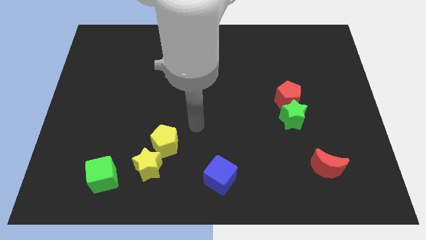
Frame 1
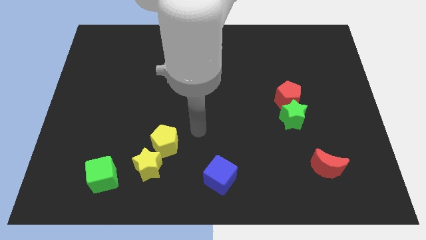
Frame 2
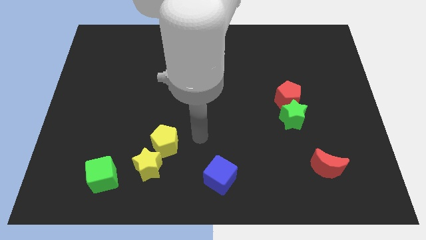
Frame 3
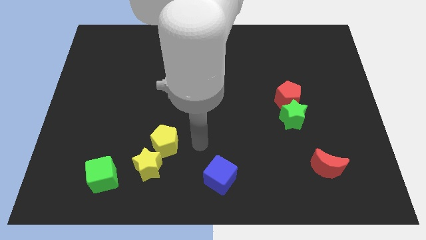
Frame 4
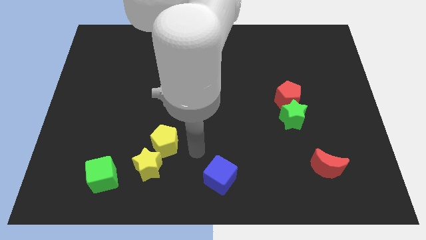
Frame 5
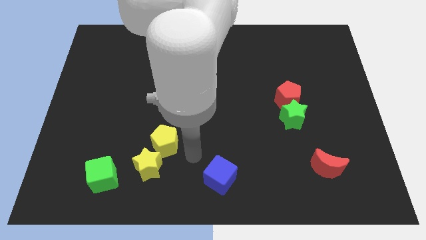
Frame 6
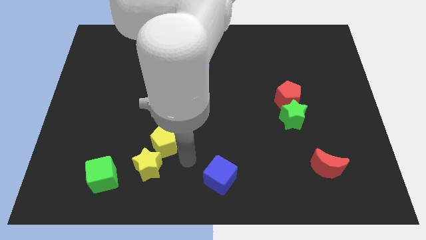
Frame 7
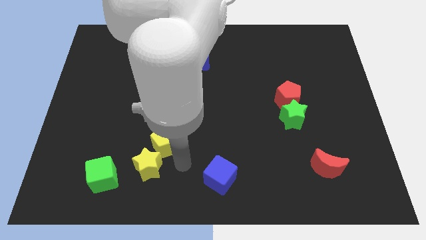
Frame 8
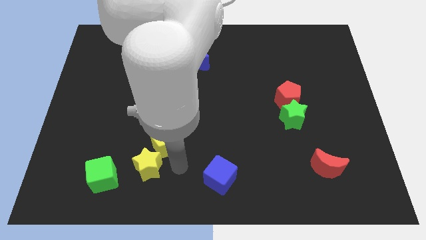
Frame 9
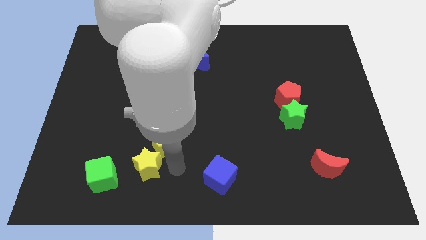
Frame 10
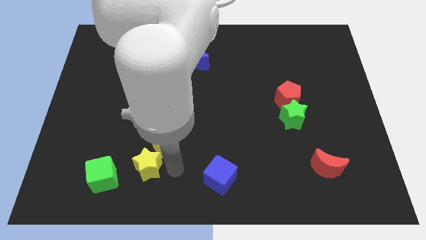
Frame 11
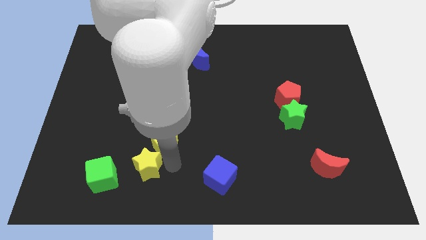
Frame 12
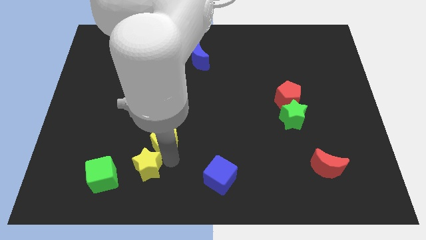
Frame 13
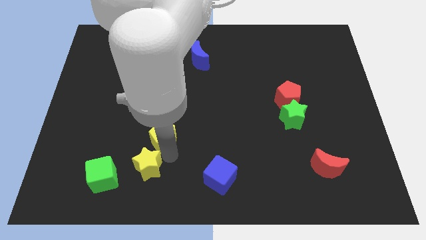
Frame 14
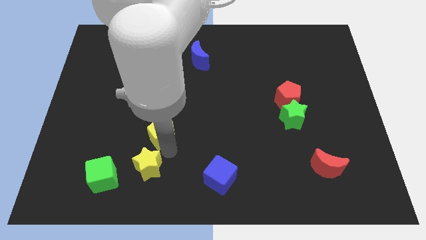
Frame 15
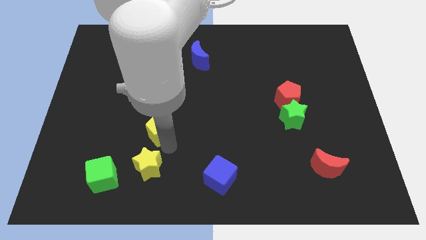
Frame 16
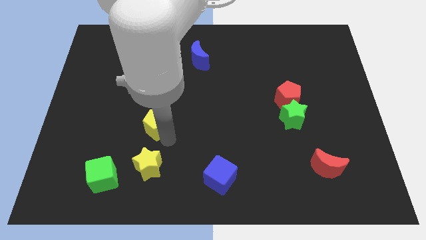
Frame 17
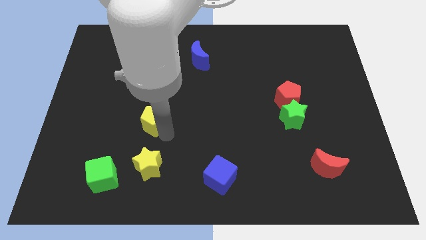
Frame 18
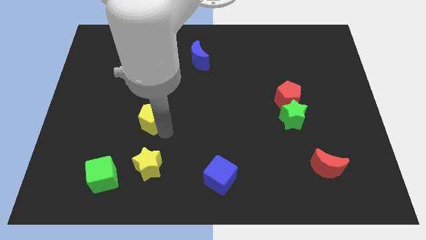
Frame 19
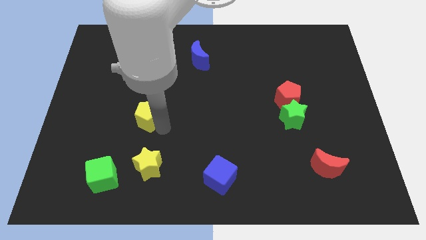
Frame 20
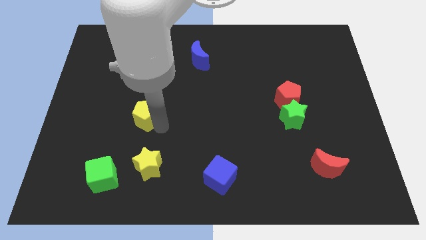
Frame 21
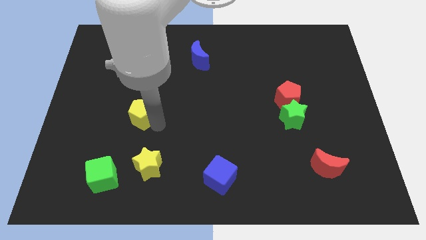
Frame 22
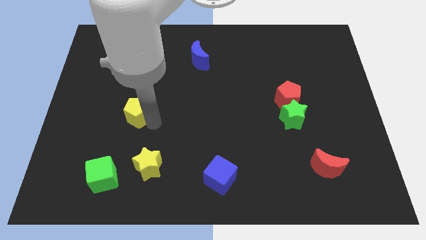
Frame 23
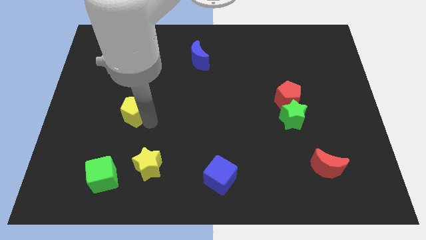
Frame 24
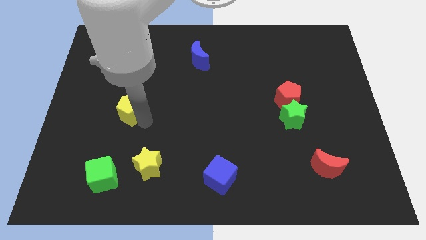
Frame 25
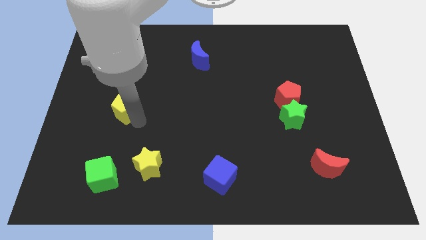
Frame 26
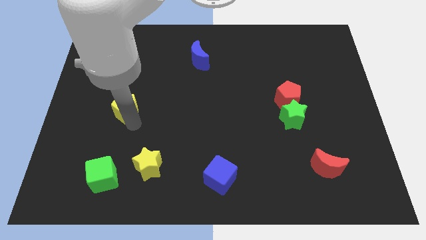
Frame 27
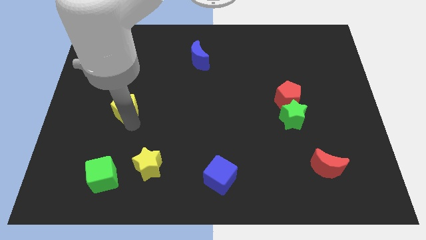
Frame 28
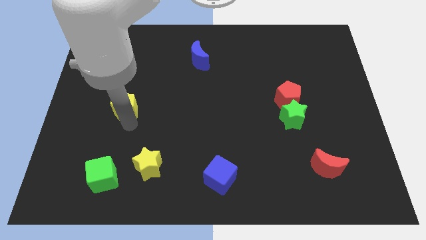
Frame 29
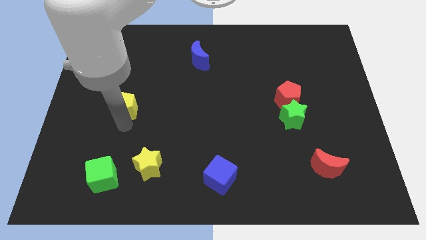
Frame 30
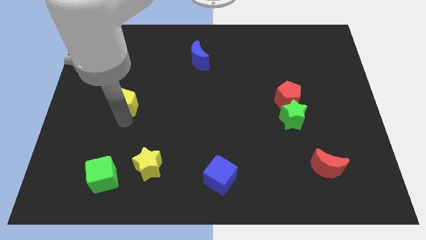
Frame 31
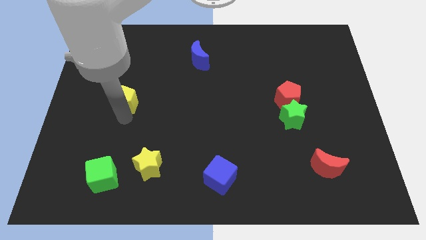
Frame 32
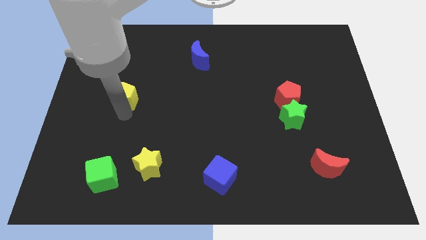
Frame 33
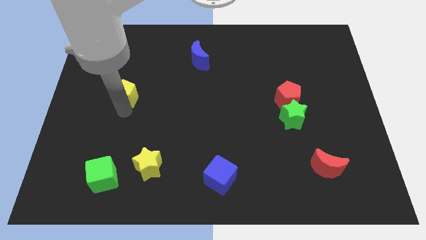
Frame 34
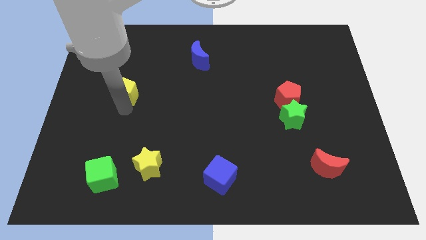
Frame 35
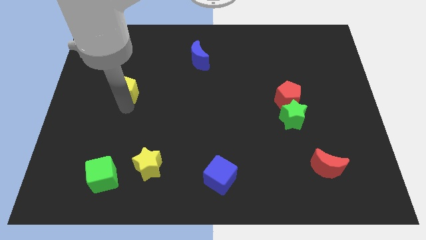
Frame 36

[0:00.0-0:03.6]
place the yellow pentagon to the left of the red pentagon

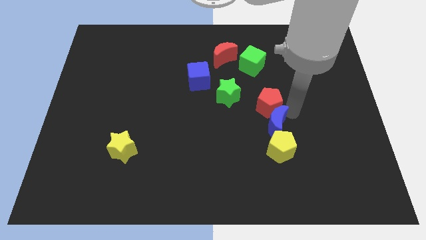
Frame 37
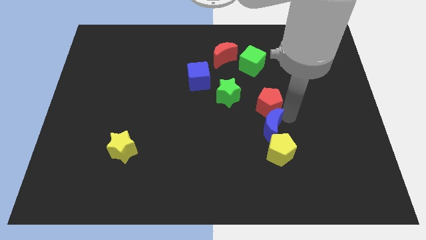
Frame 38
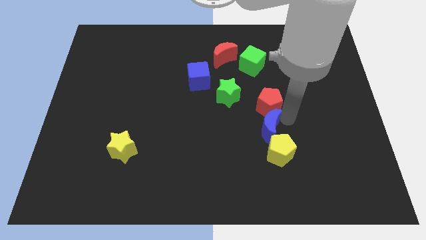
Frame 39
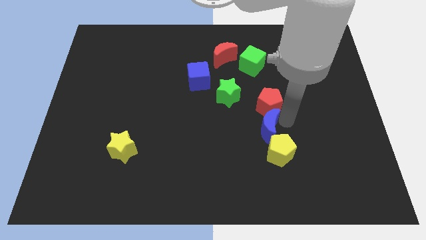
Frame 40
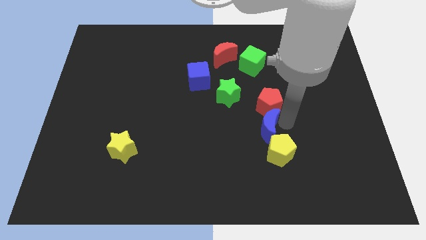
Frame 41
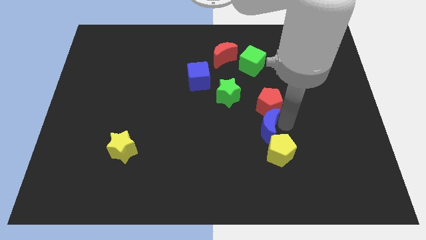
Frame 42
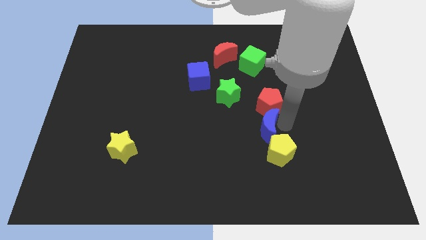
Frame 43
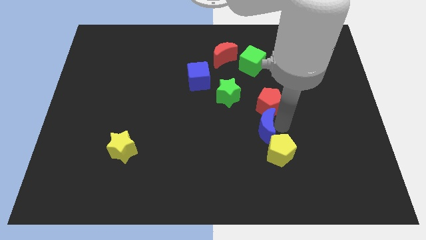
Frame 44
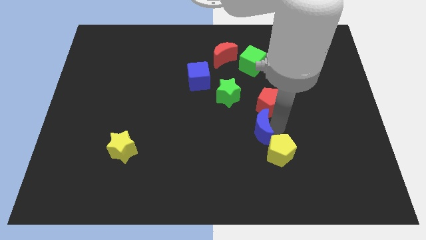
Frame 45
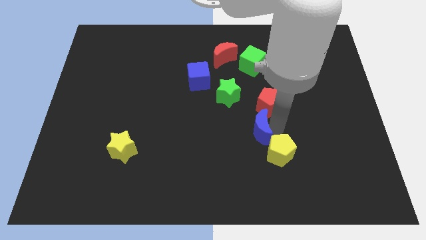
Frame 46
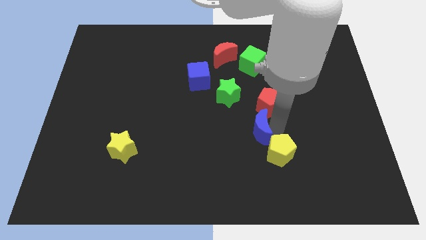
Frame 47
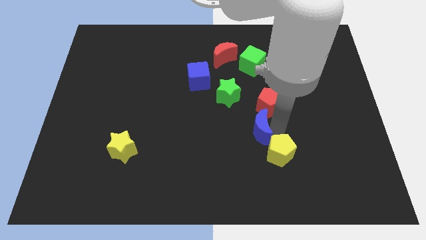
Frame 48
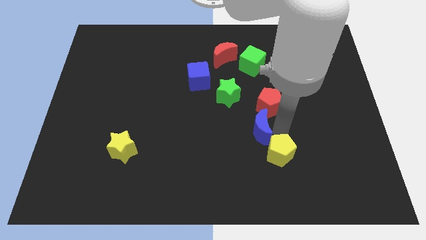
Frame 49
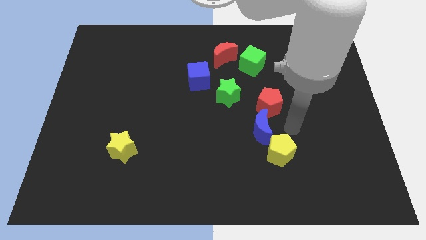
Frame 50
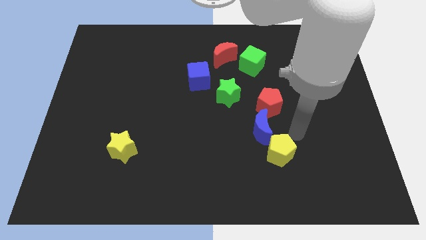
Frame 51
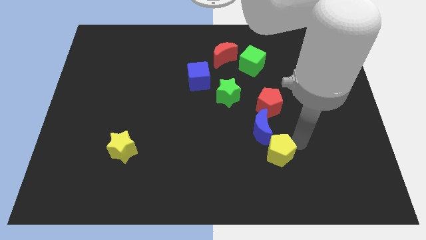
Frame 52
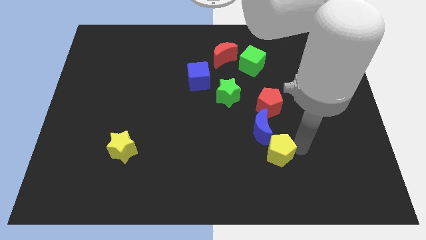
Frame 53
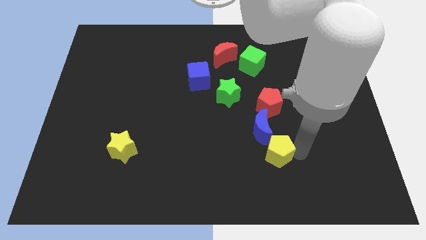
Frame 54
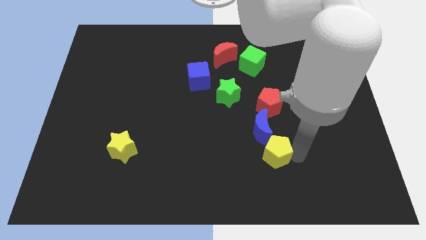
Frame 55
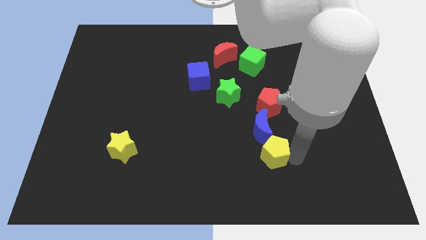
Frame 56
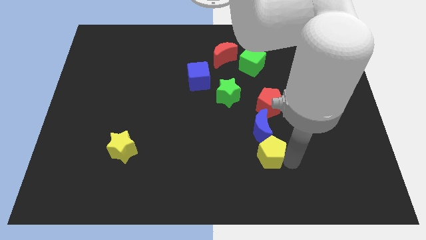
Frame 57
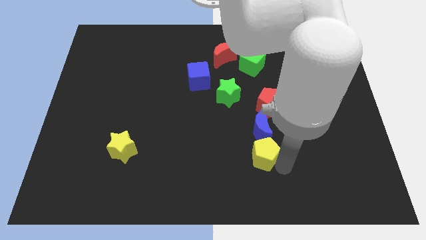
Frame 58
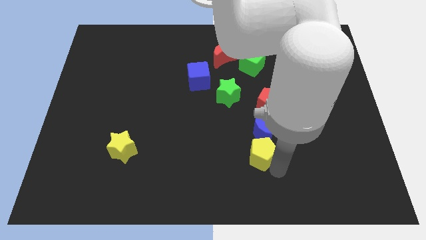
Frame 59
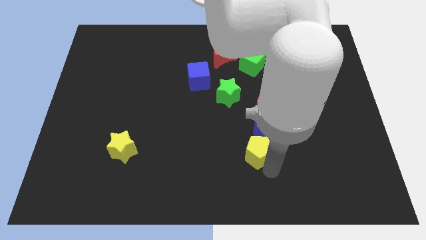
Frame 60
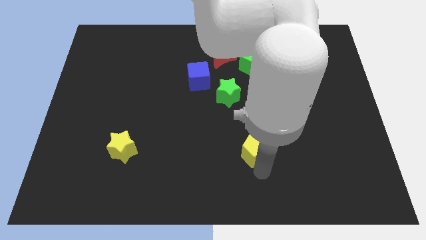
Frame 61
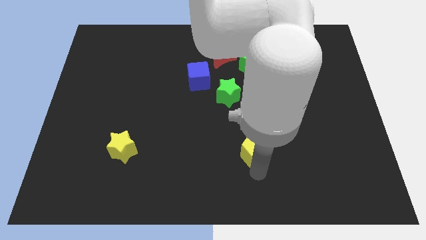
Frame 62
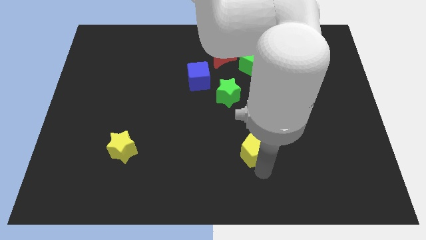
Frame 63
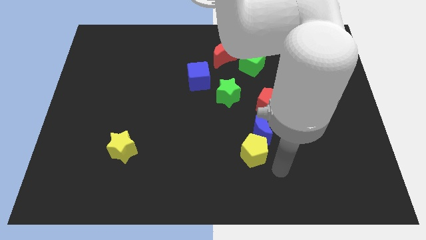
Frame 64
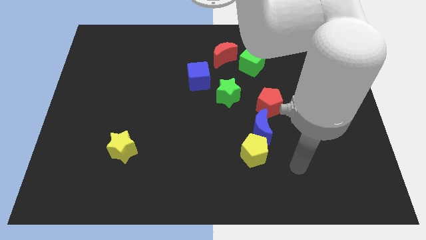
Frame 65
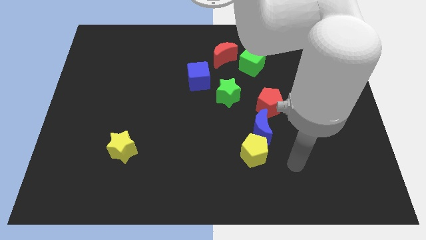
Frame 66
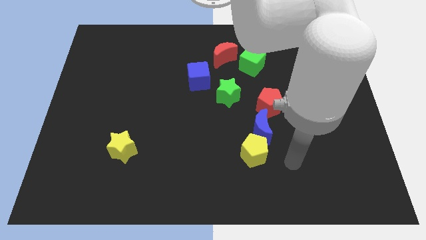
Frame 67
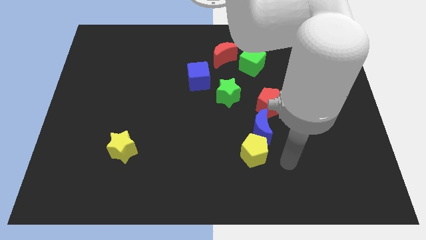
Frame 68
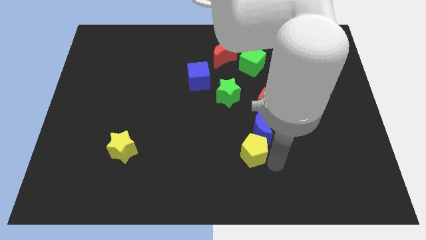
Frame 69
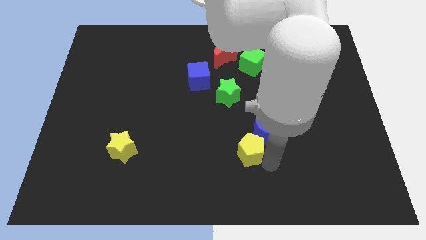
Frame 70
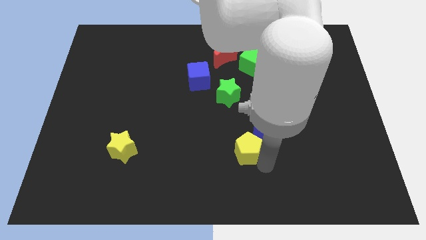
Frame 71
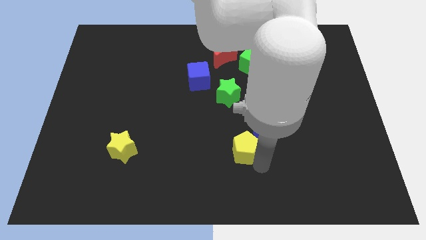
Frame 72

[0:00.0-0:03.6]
push the yellow pentagon to the bottom left of the blue moon

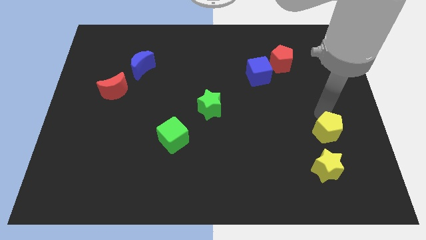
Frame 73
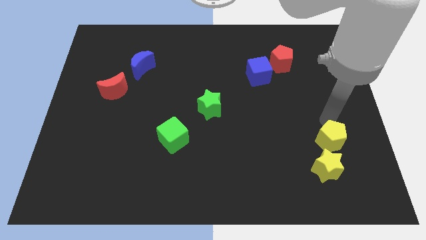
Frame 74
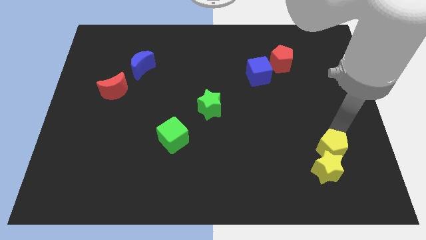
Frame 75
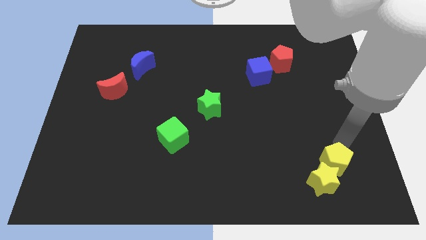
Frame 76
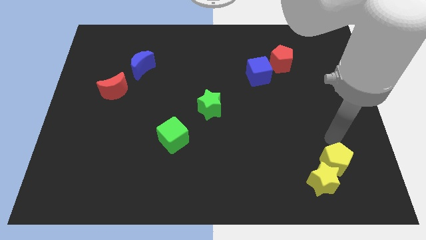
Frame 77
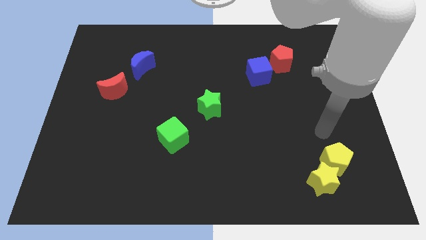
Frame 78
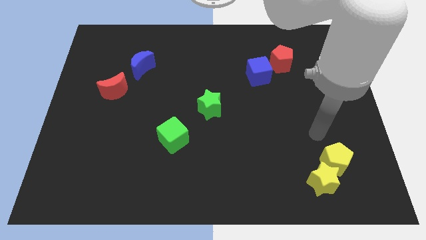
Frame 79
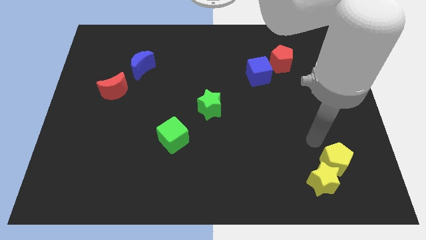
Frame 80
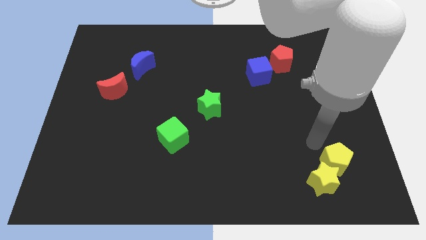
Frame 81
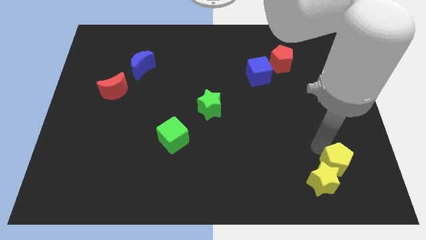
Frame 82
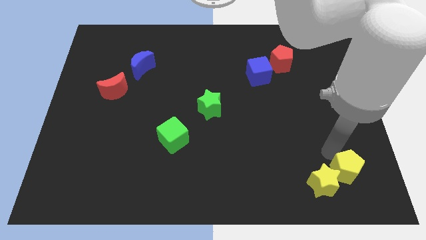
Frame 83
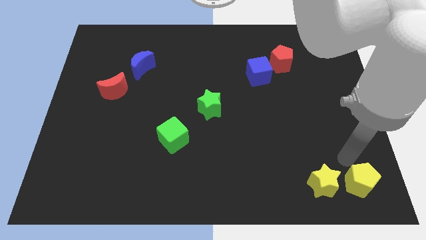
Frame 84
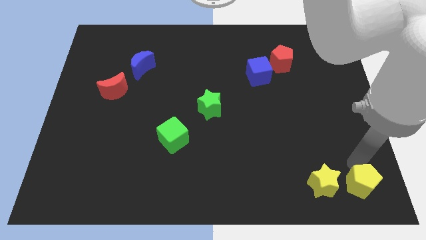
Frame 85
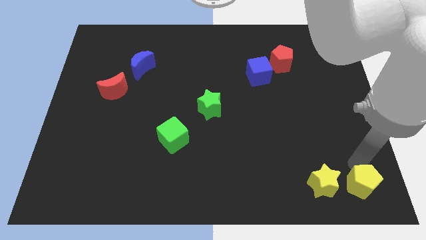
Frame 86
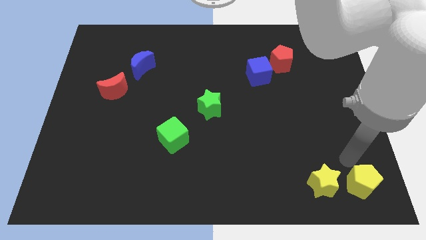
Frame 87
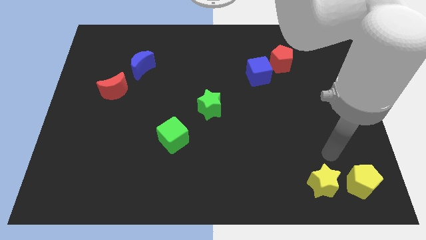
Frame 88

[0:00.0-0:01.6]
move the yellow pentagon slightly to the bottom right of the board

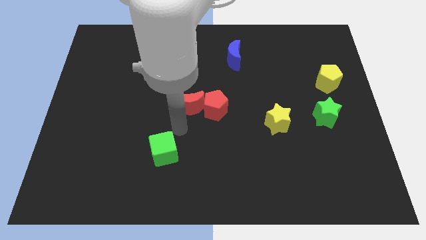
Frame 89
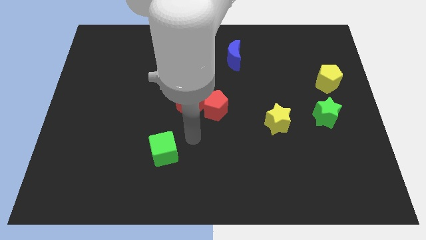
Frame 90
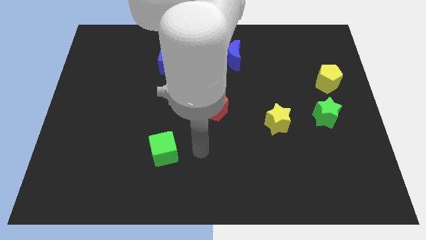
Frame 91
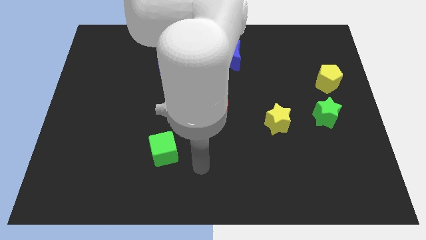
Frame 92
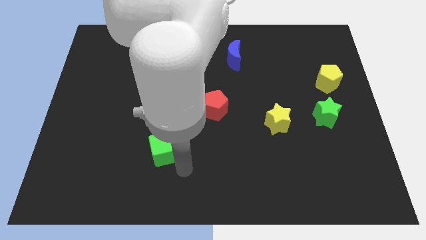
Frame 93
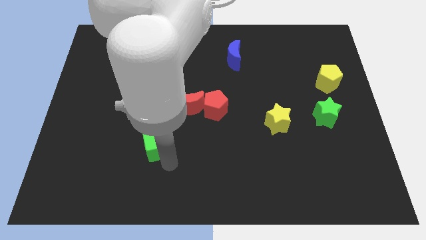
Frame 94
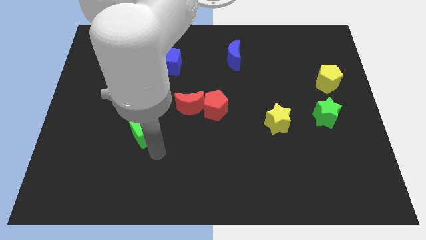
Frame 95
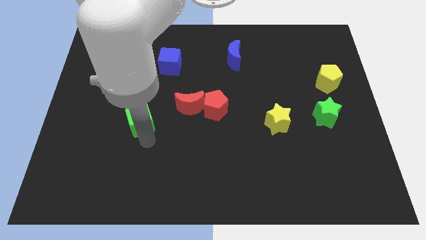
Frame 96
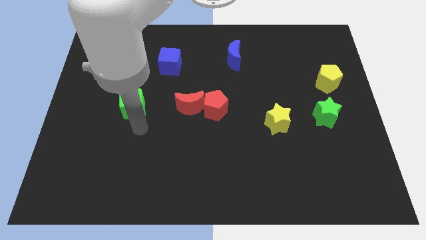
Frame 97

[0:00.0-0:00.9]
place the green cube to the left side of red crescent
